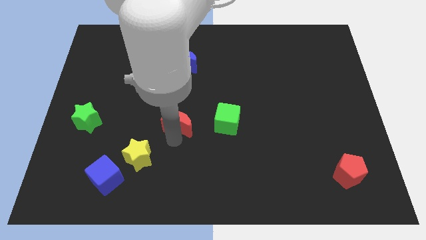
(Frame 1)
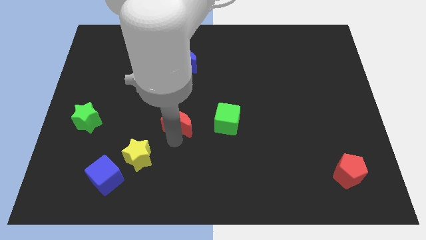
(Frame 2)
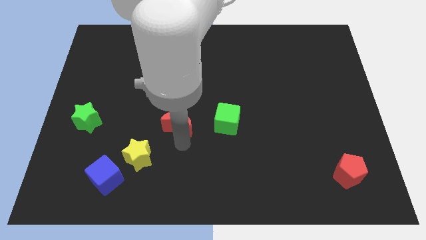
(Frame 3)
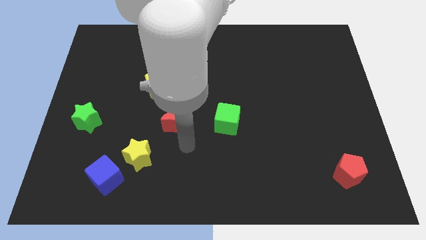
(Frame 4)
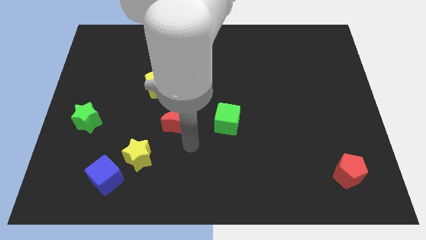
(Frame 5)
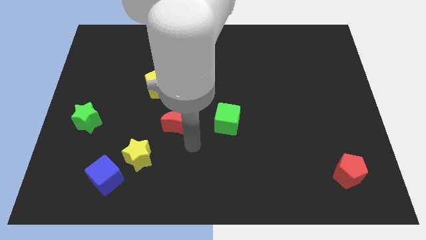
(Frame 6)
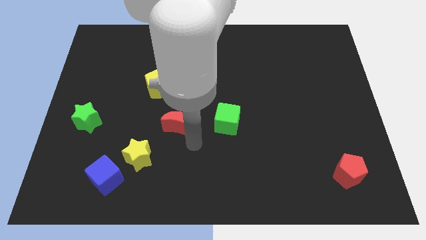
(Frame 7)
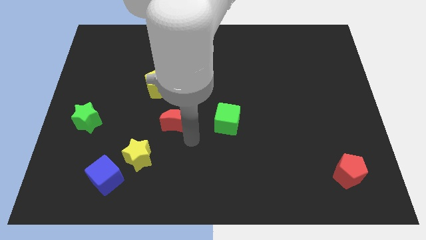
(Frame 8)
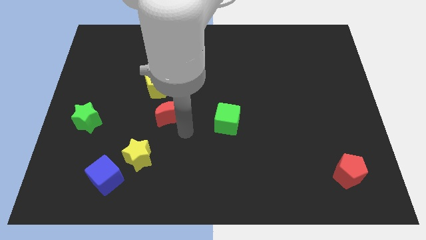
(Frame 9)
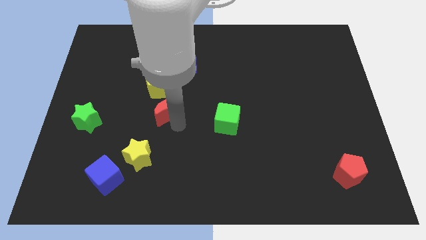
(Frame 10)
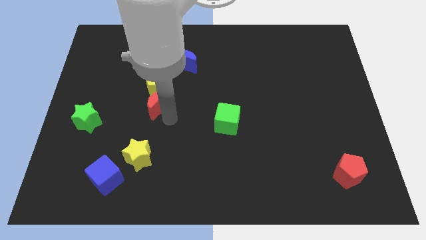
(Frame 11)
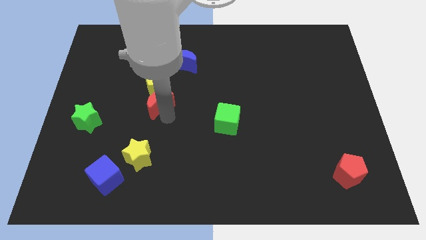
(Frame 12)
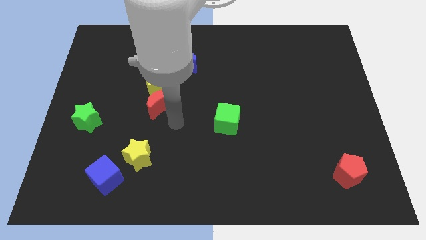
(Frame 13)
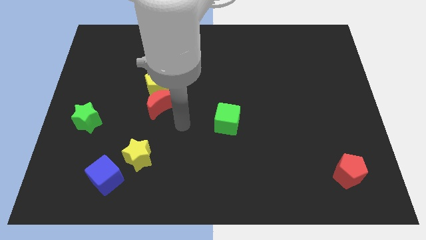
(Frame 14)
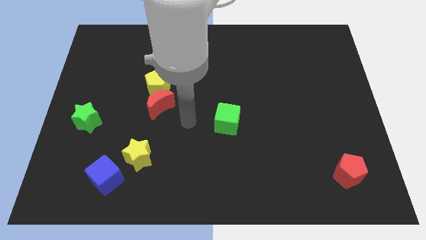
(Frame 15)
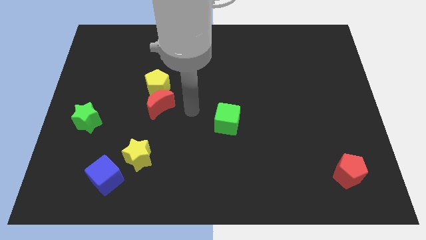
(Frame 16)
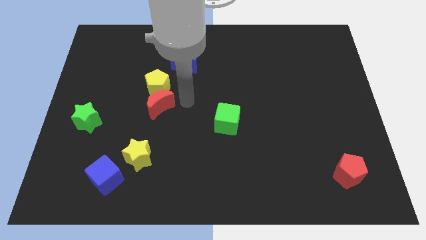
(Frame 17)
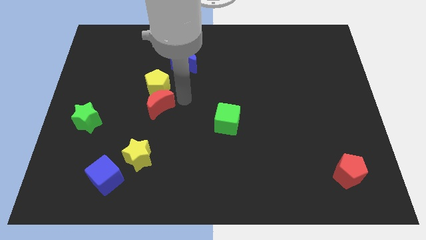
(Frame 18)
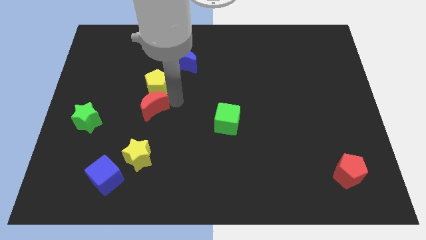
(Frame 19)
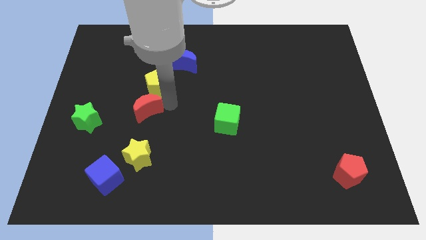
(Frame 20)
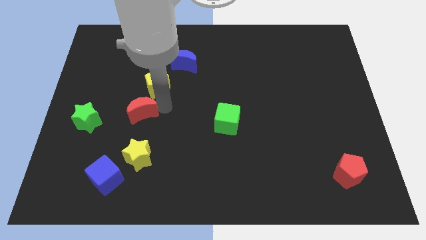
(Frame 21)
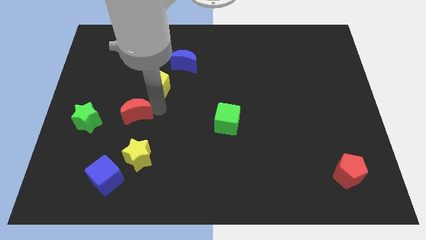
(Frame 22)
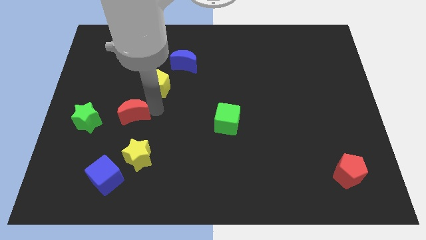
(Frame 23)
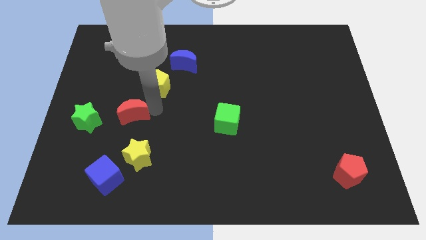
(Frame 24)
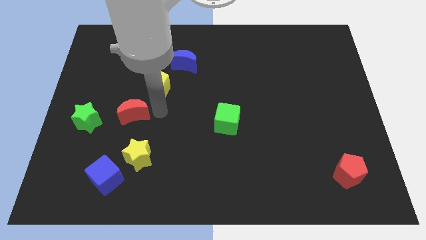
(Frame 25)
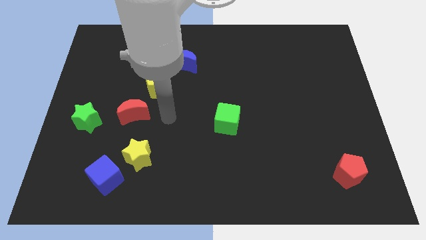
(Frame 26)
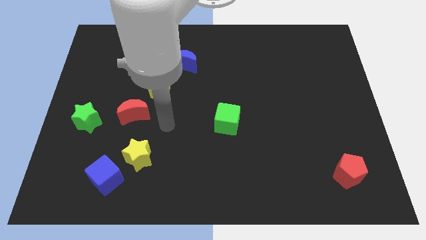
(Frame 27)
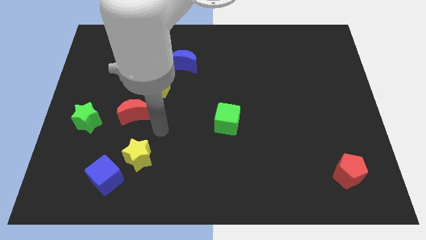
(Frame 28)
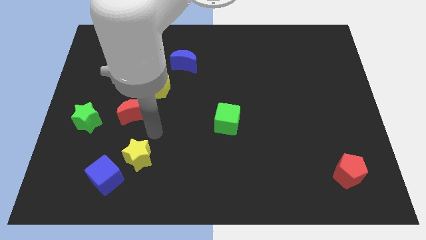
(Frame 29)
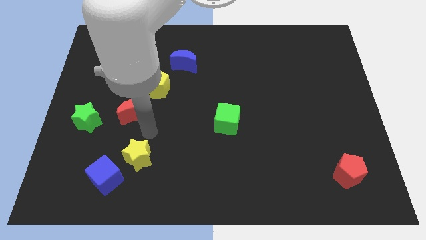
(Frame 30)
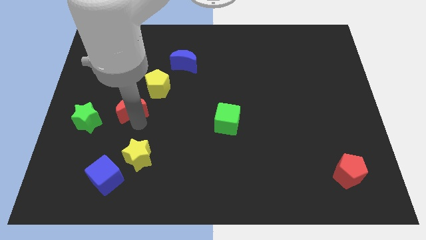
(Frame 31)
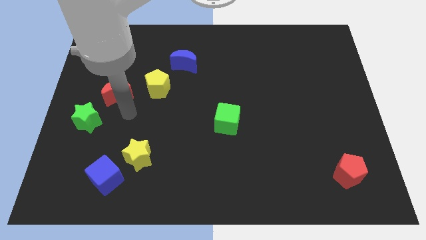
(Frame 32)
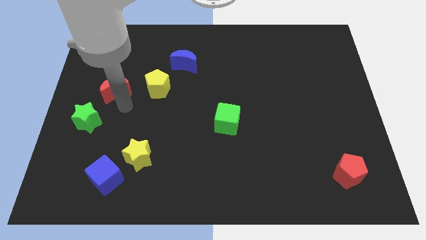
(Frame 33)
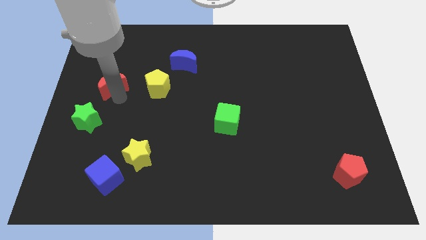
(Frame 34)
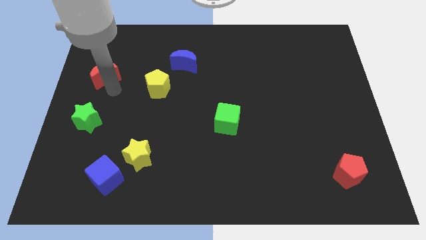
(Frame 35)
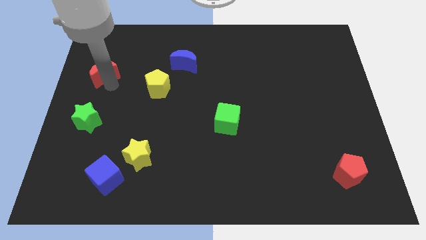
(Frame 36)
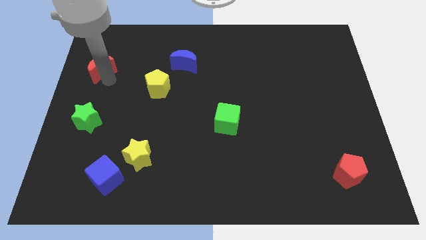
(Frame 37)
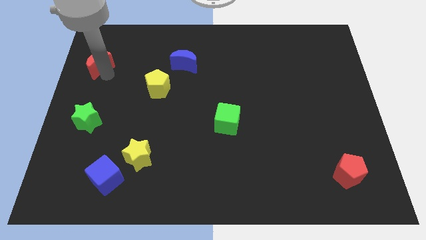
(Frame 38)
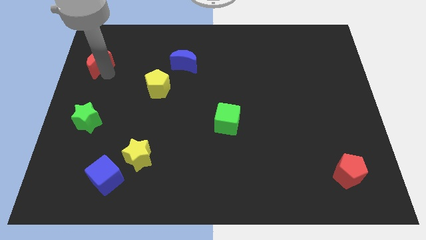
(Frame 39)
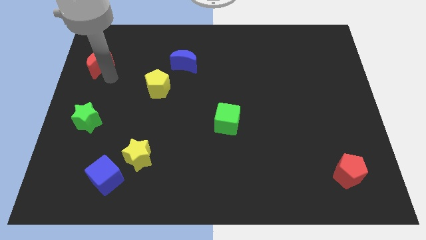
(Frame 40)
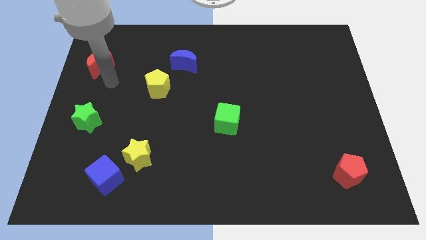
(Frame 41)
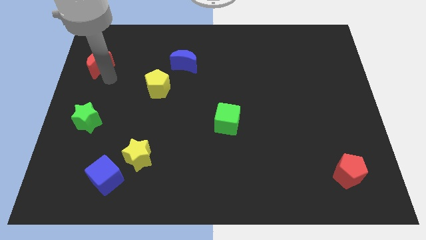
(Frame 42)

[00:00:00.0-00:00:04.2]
move the red crescent above the green star

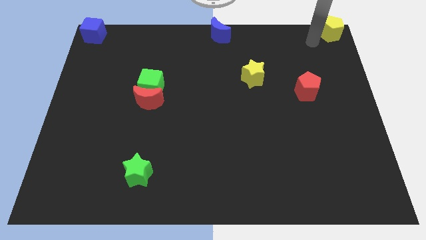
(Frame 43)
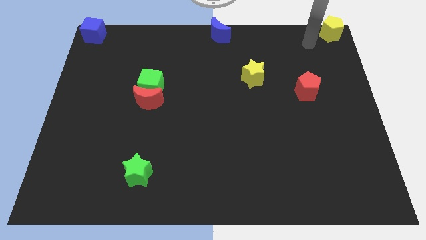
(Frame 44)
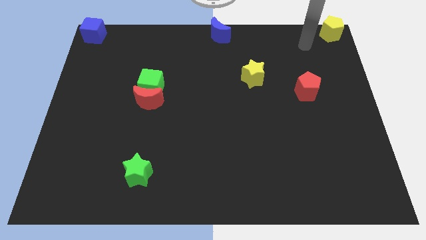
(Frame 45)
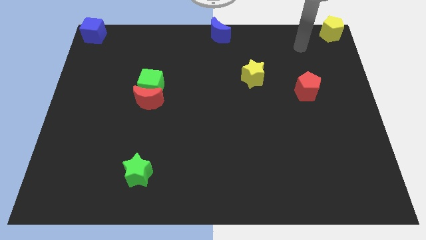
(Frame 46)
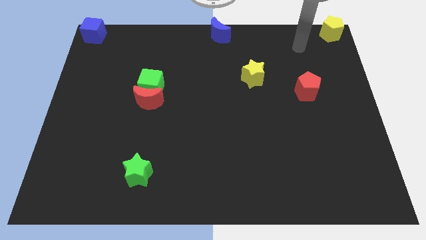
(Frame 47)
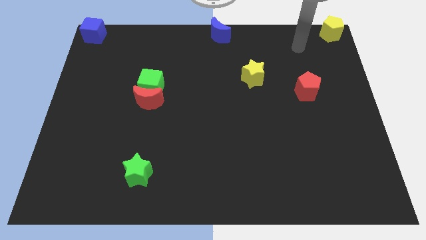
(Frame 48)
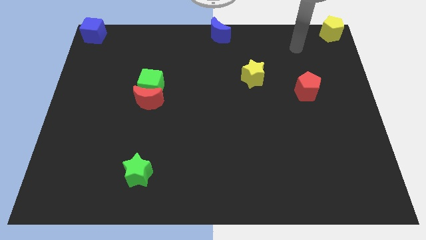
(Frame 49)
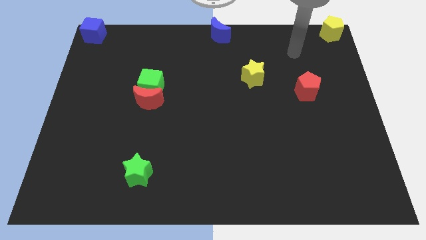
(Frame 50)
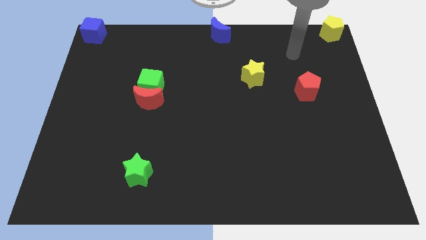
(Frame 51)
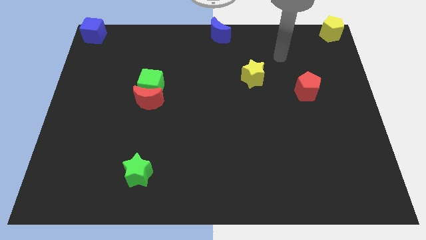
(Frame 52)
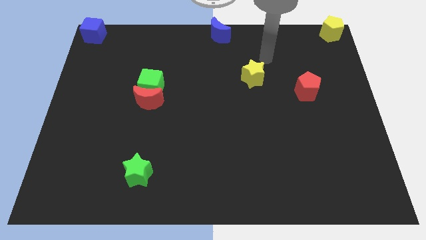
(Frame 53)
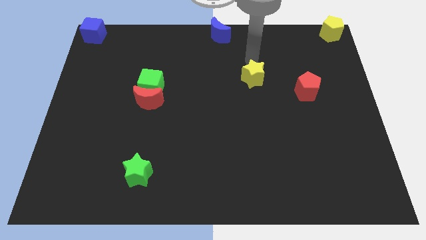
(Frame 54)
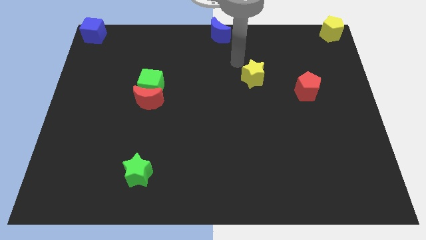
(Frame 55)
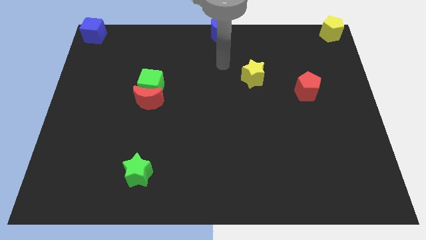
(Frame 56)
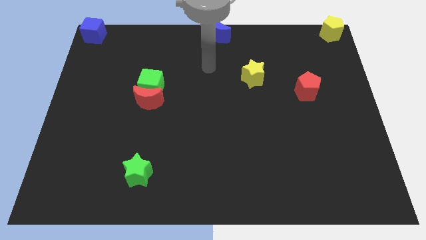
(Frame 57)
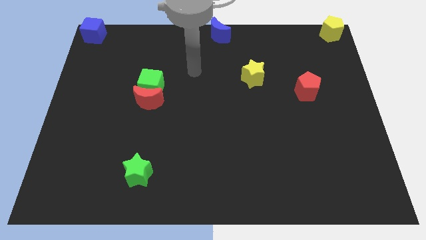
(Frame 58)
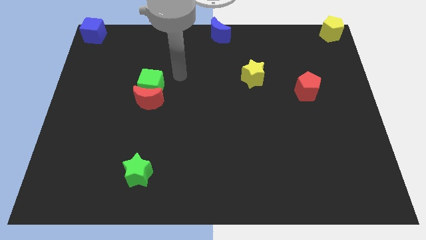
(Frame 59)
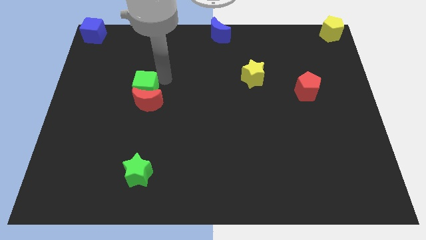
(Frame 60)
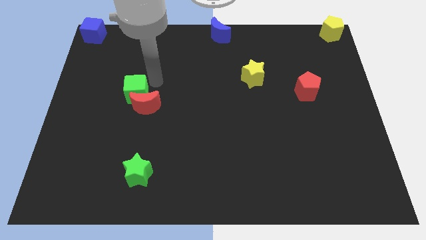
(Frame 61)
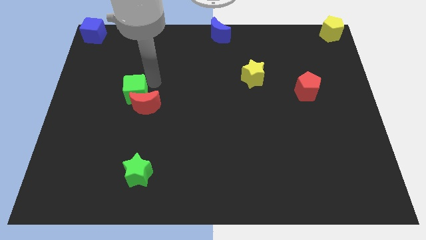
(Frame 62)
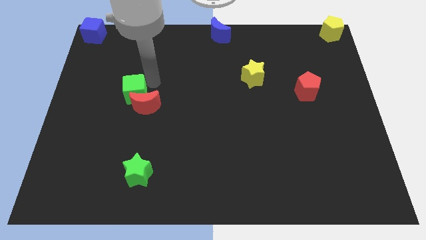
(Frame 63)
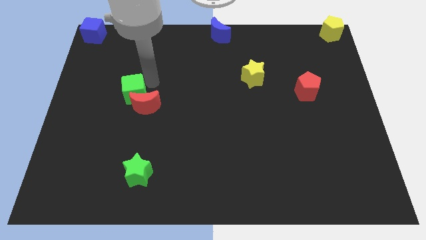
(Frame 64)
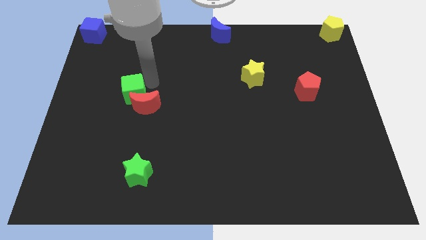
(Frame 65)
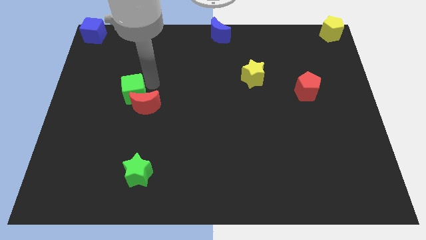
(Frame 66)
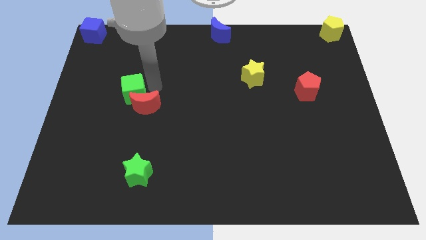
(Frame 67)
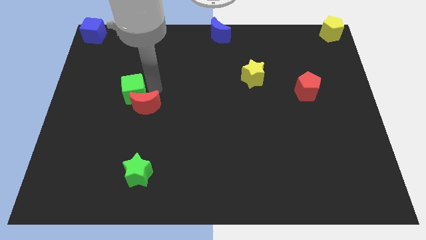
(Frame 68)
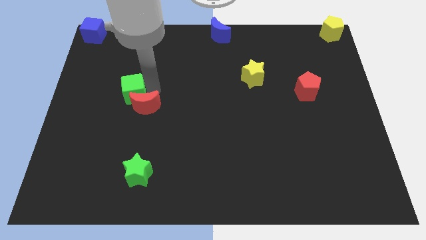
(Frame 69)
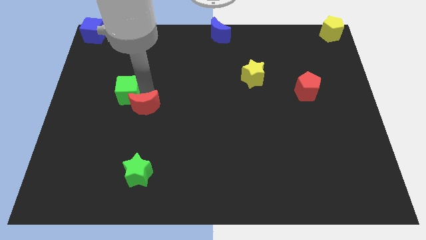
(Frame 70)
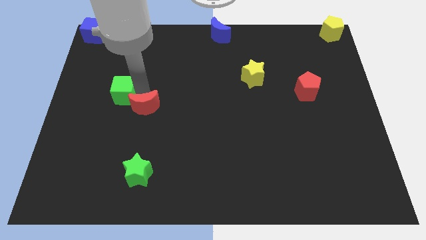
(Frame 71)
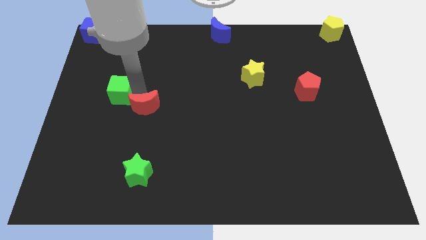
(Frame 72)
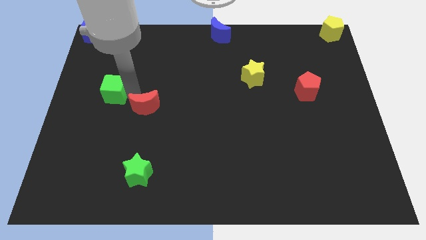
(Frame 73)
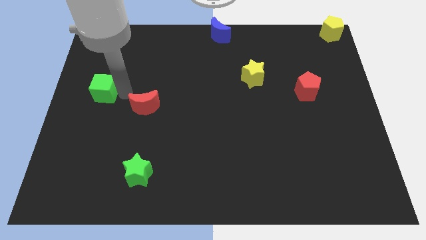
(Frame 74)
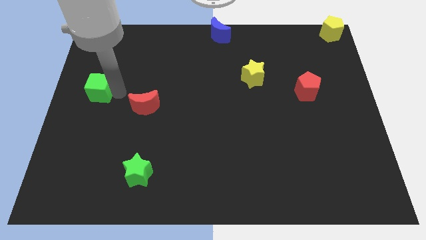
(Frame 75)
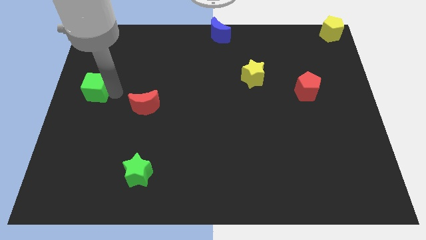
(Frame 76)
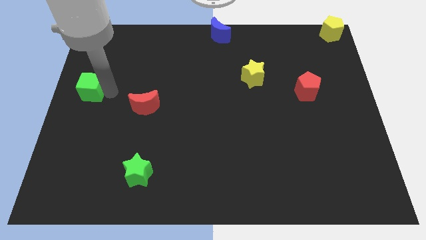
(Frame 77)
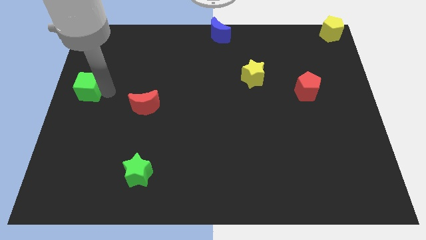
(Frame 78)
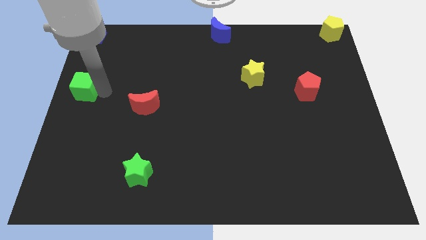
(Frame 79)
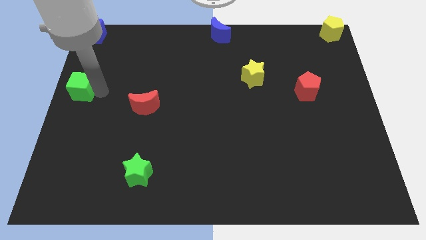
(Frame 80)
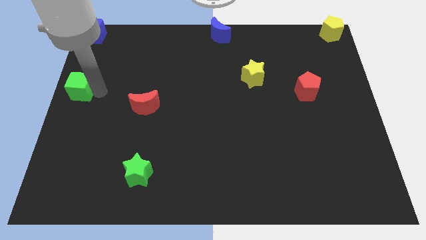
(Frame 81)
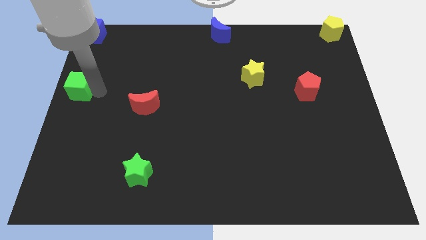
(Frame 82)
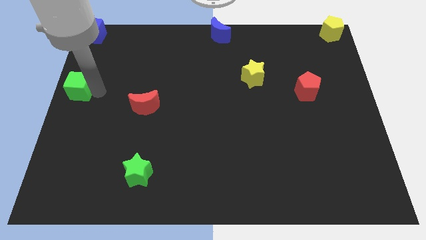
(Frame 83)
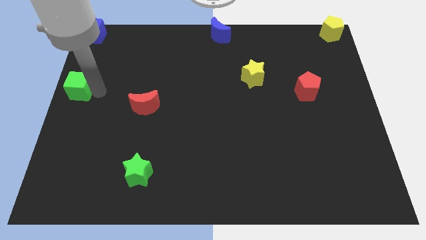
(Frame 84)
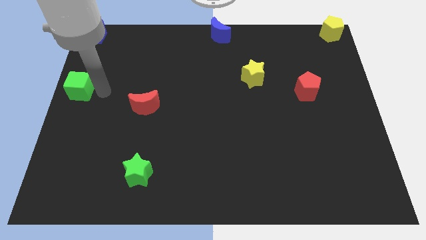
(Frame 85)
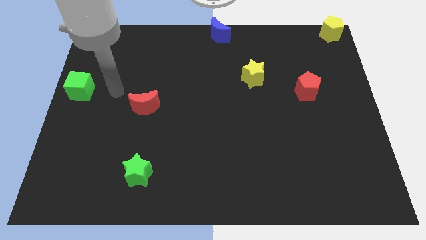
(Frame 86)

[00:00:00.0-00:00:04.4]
move the green cube to the bottom of the blue cube

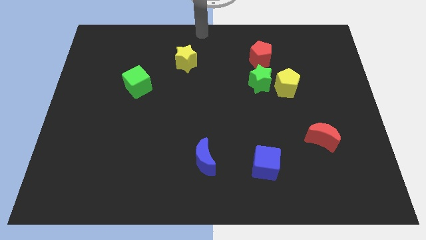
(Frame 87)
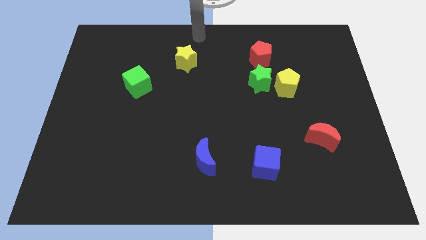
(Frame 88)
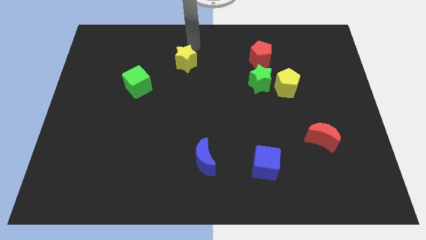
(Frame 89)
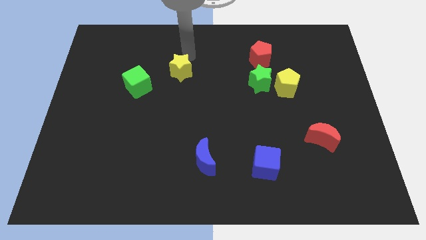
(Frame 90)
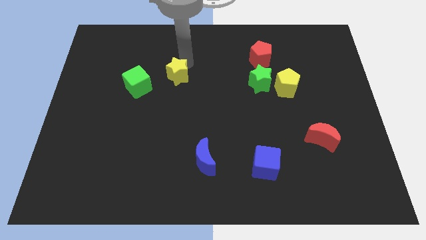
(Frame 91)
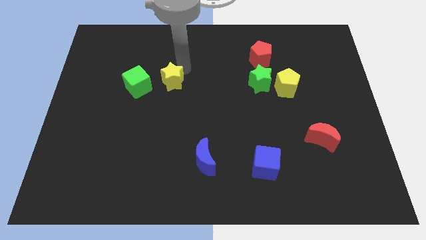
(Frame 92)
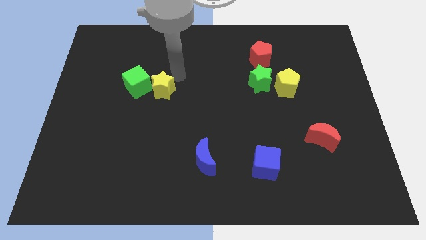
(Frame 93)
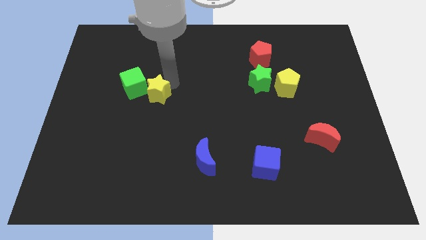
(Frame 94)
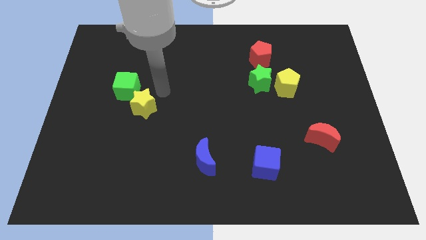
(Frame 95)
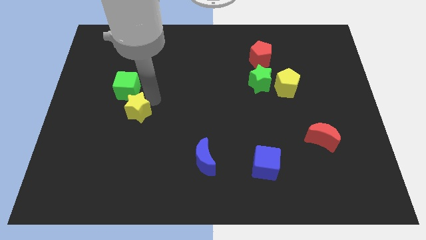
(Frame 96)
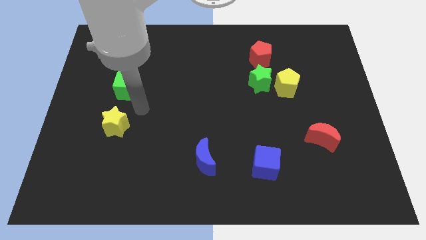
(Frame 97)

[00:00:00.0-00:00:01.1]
push yellow star below green cube
